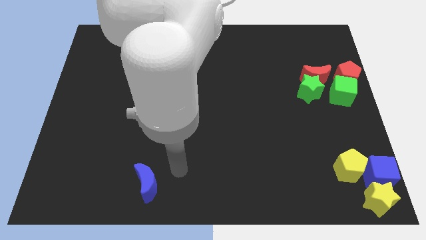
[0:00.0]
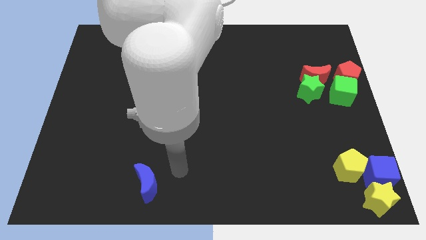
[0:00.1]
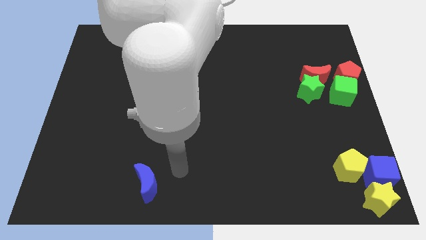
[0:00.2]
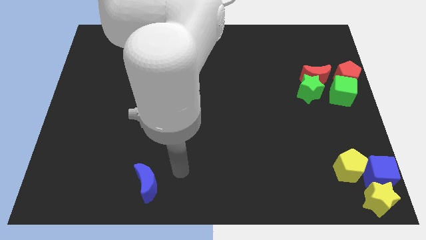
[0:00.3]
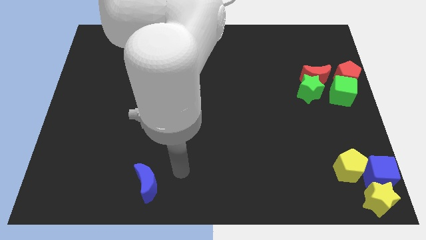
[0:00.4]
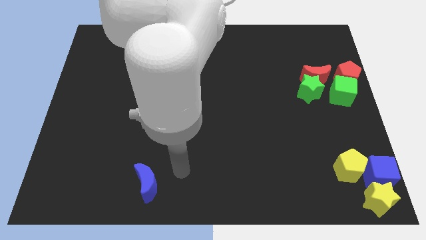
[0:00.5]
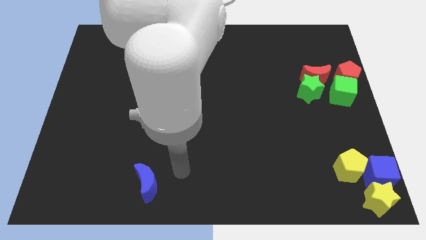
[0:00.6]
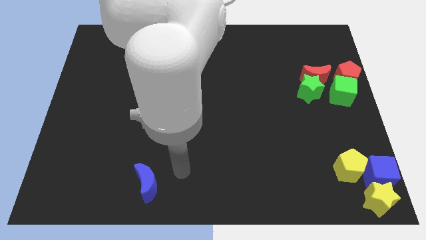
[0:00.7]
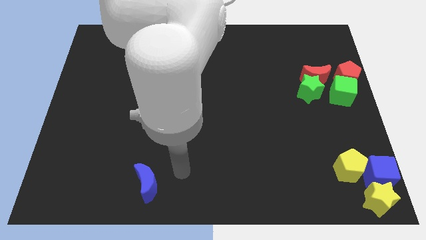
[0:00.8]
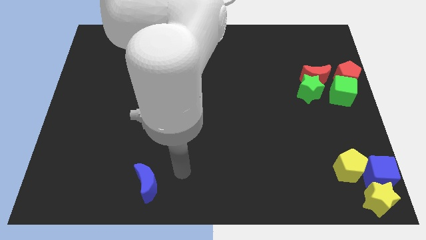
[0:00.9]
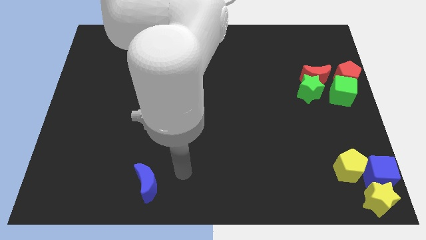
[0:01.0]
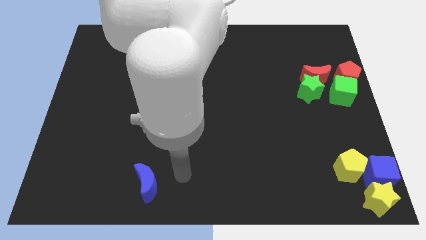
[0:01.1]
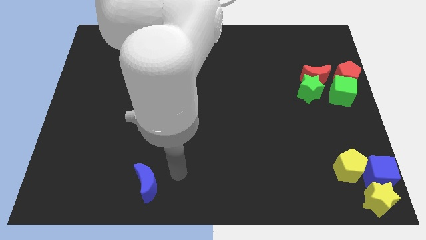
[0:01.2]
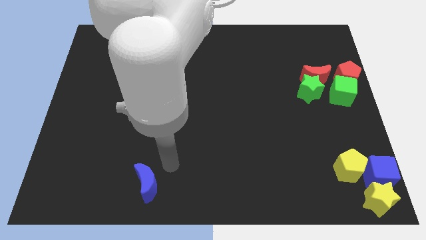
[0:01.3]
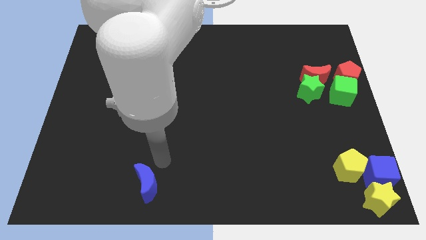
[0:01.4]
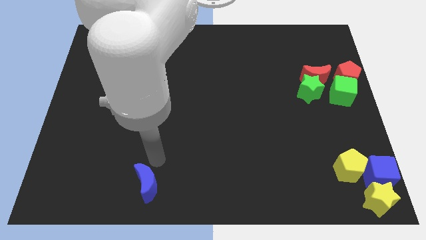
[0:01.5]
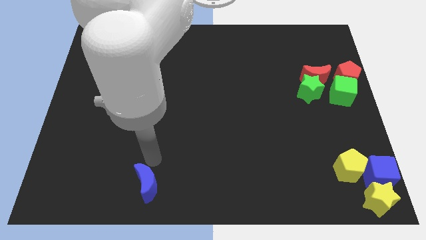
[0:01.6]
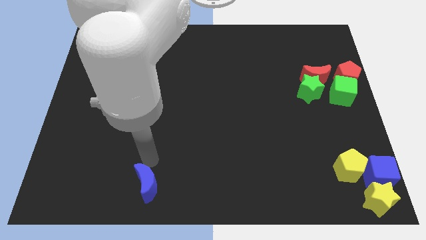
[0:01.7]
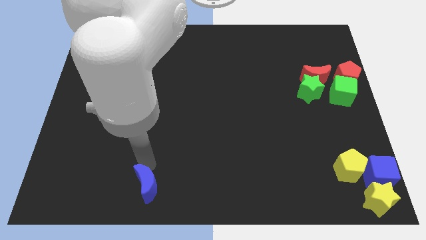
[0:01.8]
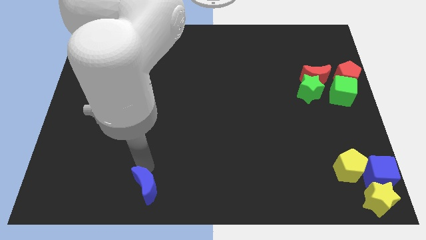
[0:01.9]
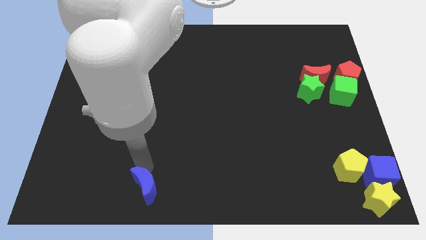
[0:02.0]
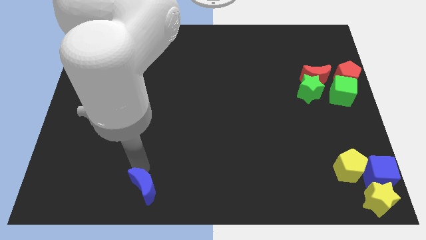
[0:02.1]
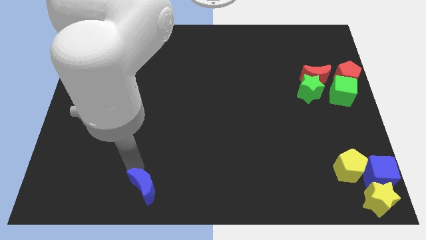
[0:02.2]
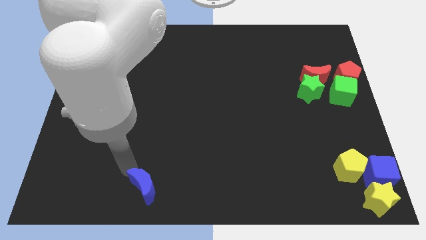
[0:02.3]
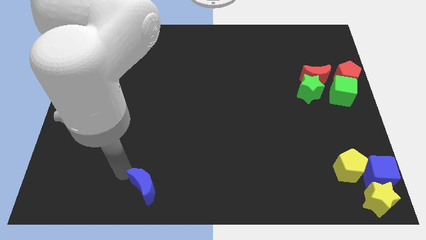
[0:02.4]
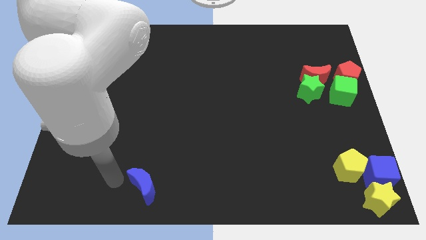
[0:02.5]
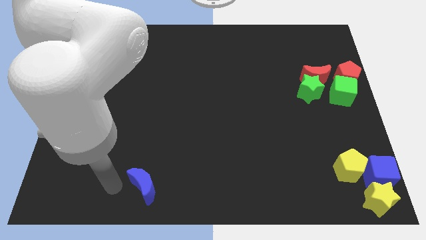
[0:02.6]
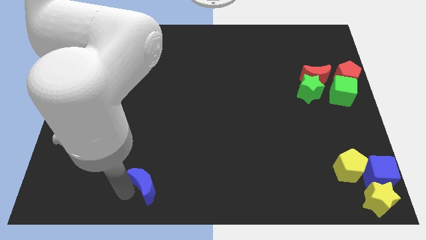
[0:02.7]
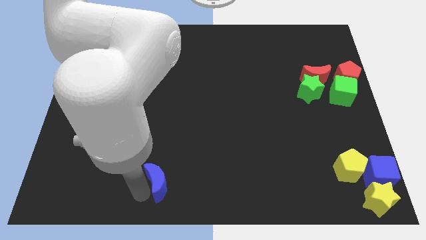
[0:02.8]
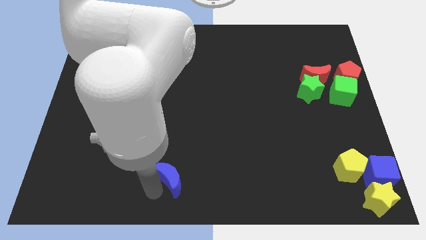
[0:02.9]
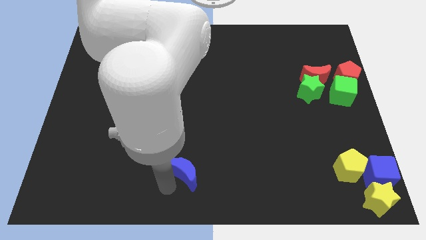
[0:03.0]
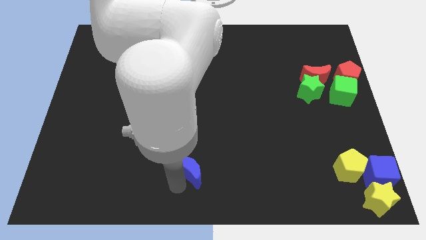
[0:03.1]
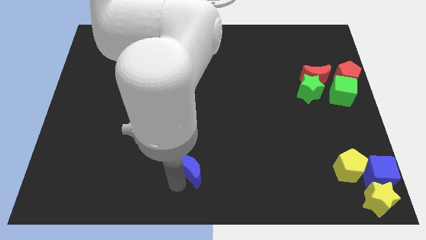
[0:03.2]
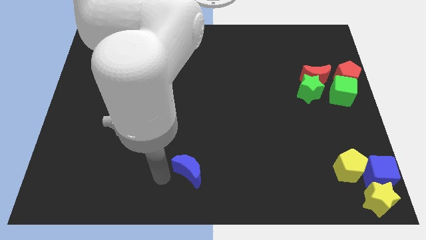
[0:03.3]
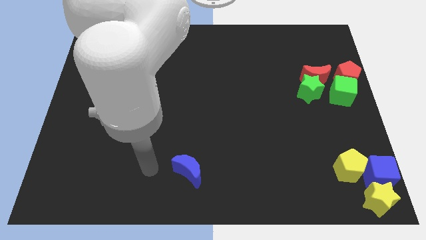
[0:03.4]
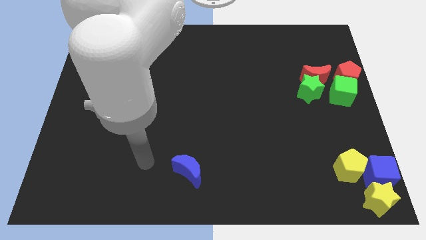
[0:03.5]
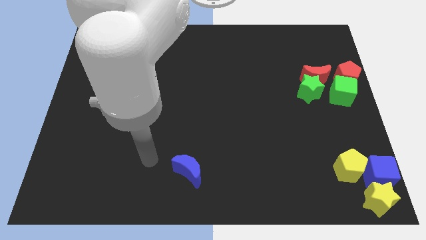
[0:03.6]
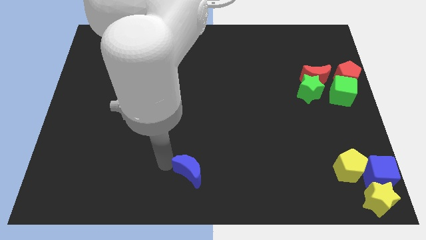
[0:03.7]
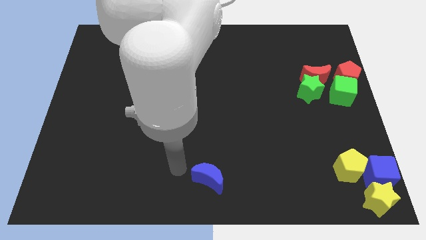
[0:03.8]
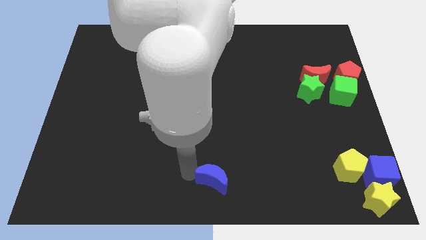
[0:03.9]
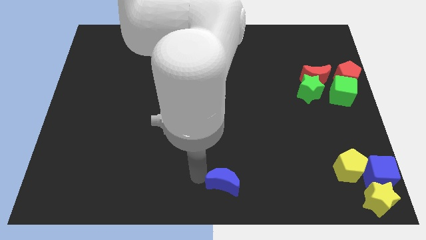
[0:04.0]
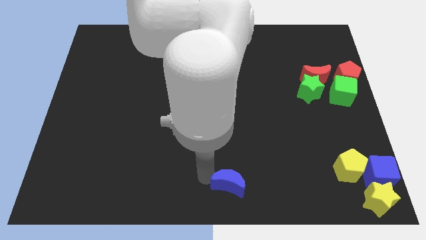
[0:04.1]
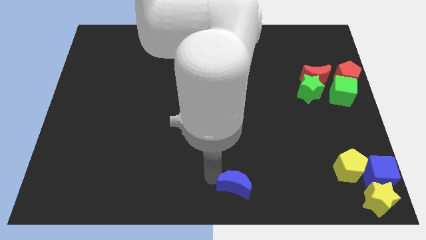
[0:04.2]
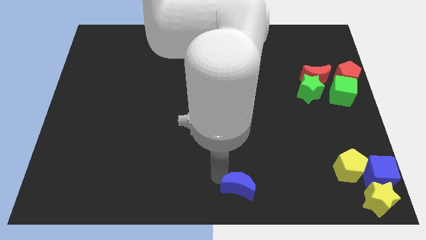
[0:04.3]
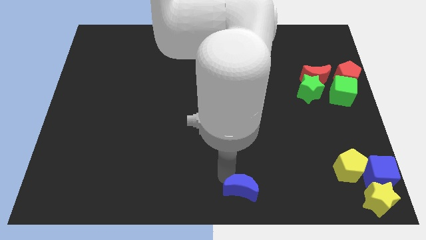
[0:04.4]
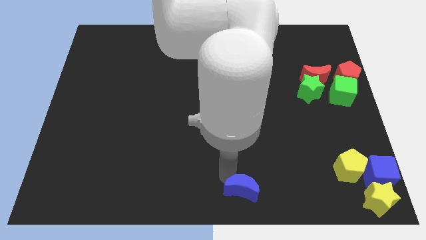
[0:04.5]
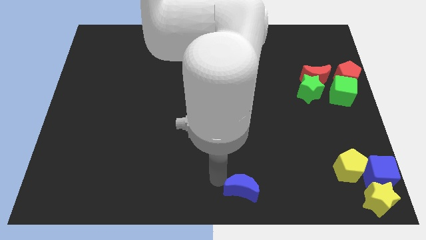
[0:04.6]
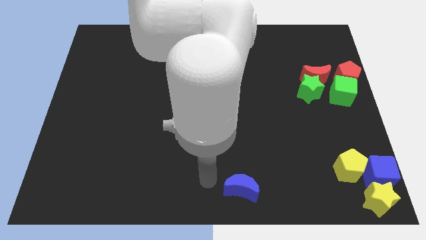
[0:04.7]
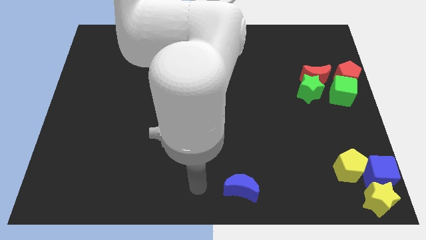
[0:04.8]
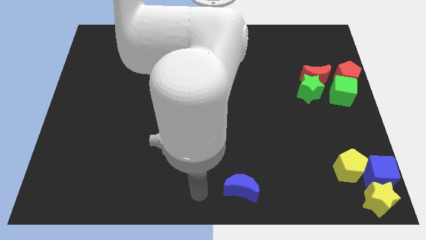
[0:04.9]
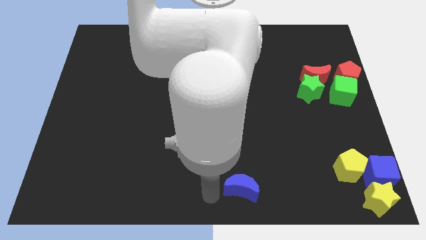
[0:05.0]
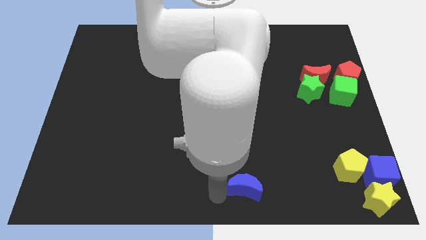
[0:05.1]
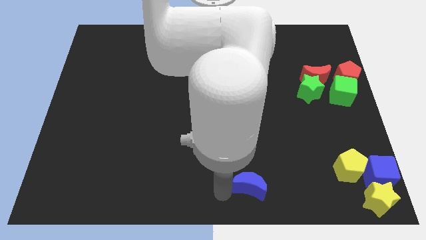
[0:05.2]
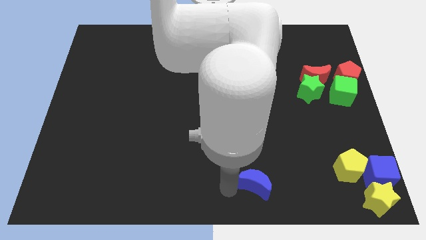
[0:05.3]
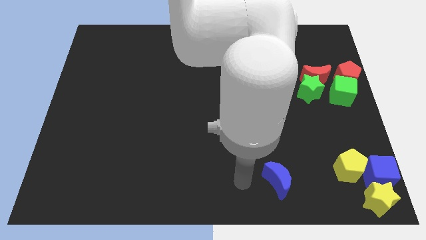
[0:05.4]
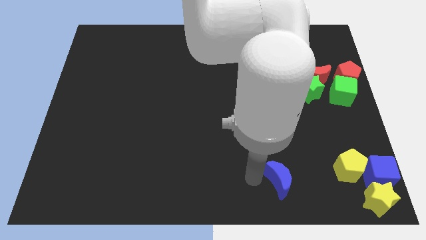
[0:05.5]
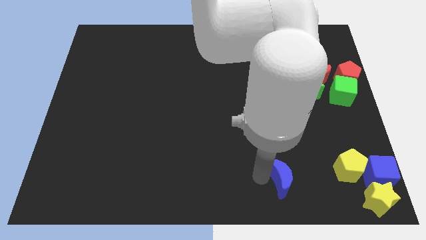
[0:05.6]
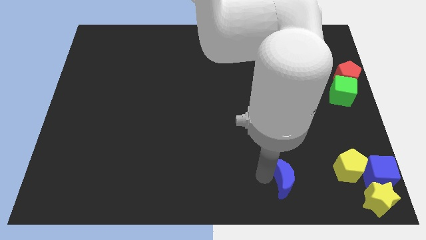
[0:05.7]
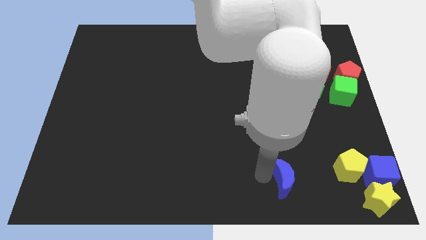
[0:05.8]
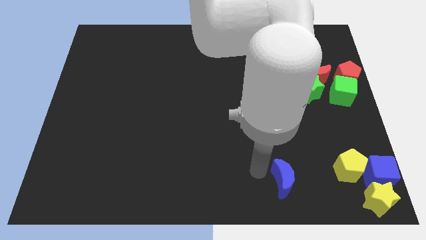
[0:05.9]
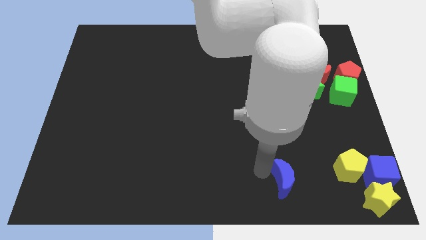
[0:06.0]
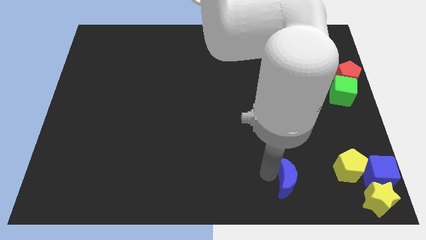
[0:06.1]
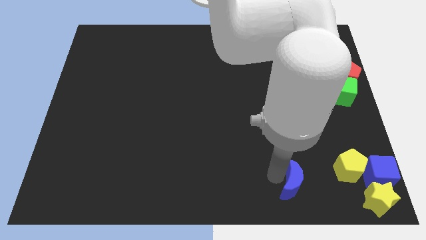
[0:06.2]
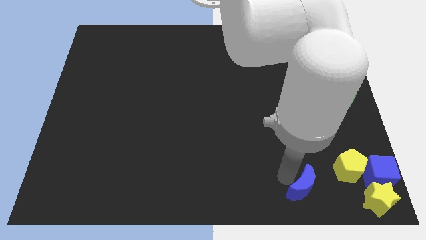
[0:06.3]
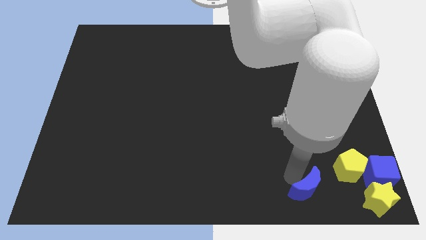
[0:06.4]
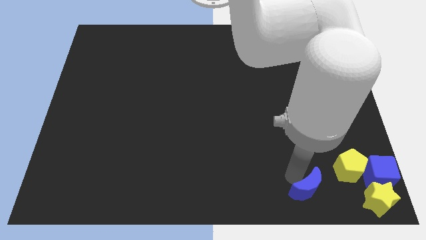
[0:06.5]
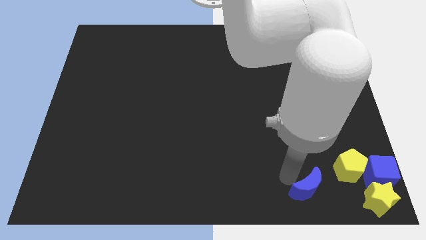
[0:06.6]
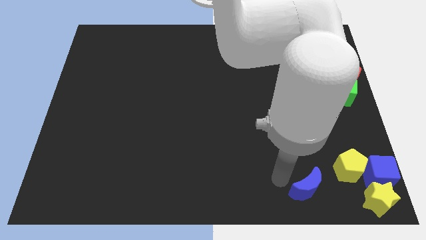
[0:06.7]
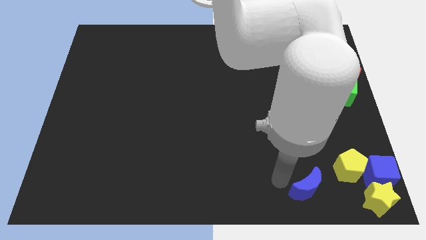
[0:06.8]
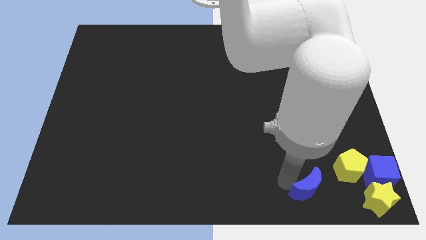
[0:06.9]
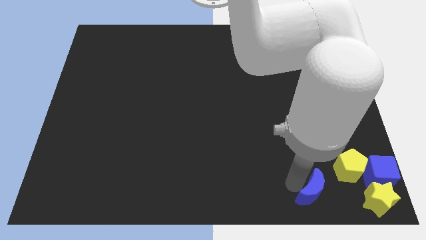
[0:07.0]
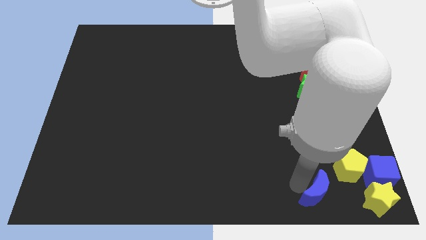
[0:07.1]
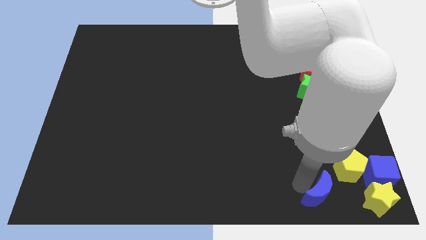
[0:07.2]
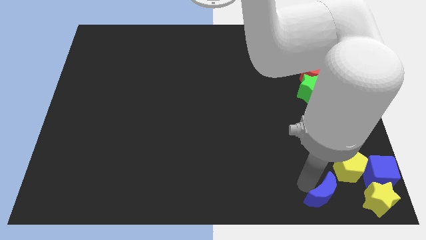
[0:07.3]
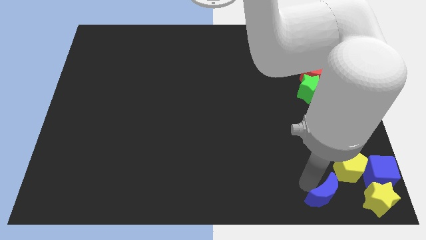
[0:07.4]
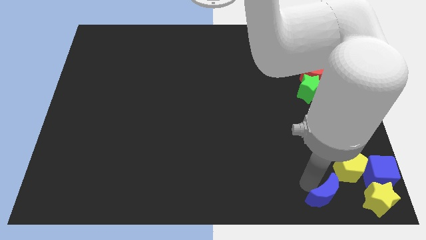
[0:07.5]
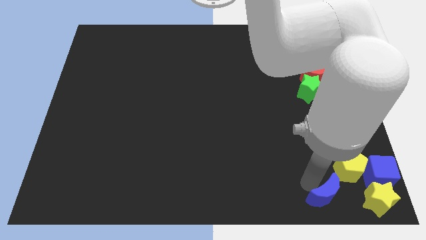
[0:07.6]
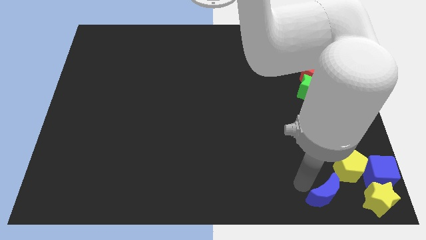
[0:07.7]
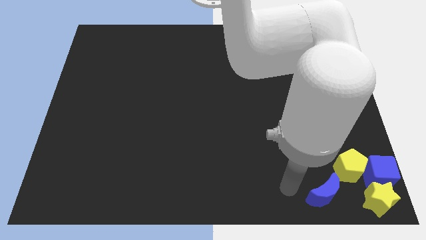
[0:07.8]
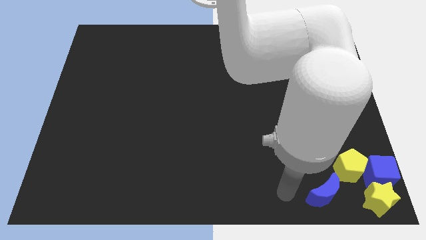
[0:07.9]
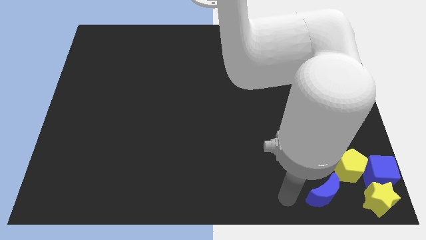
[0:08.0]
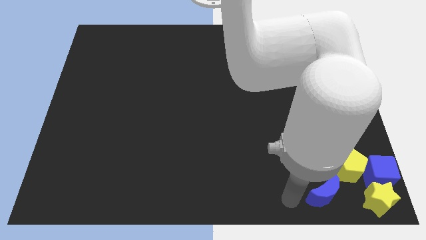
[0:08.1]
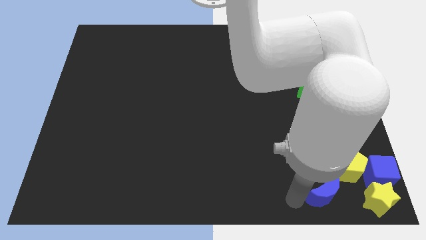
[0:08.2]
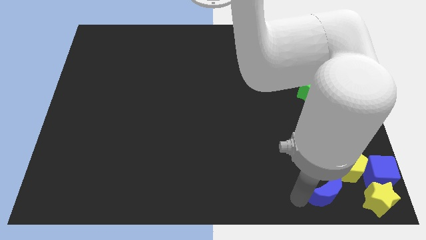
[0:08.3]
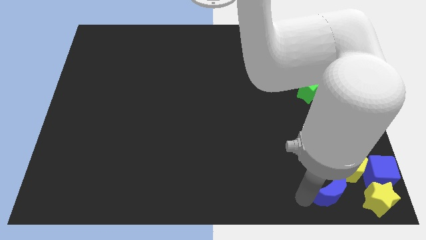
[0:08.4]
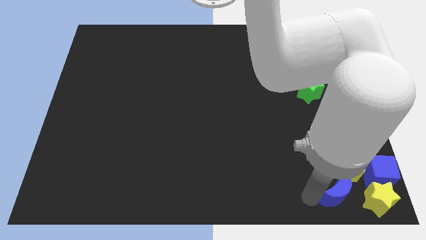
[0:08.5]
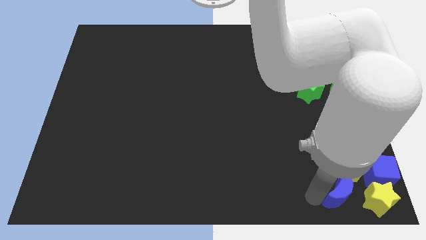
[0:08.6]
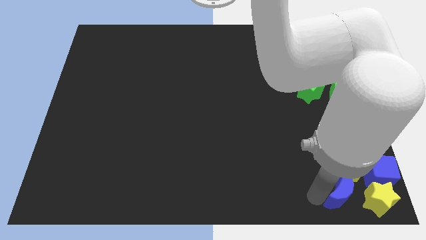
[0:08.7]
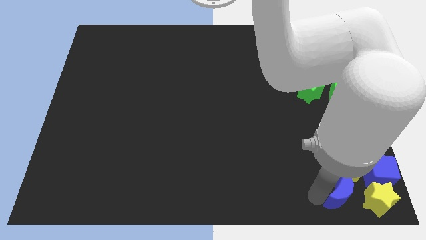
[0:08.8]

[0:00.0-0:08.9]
push the blue crescent towards the group of blocks at the bottom right corner
